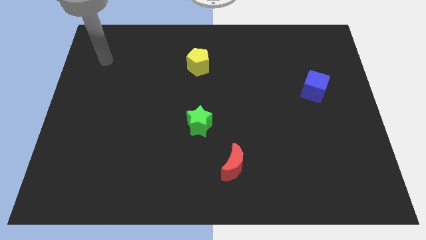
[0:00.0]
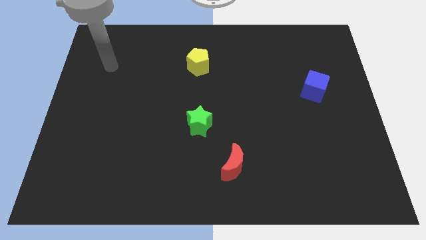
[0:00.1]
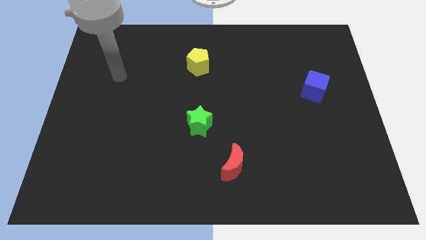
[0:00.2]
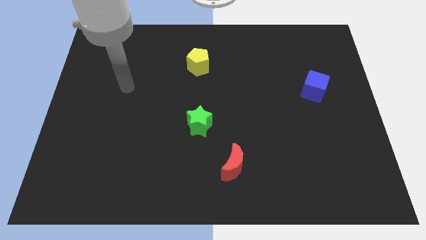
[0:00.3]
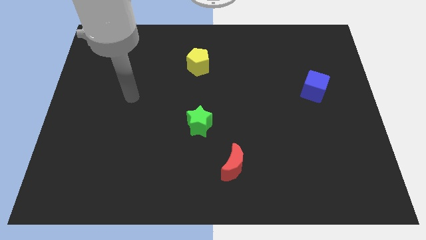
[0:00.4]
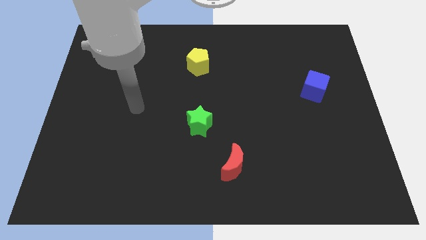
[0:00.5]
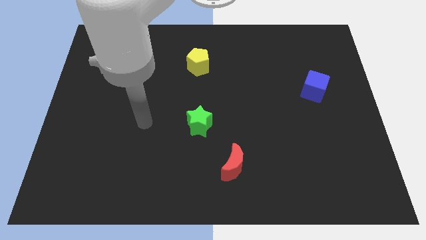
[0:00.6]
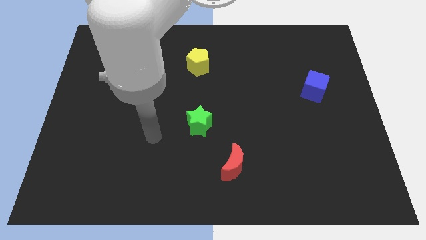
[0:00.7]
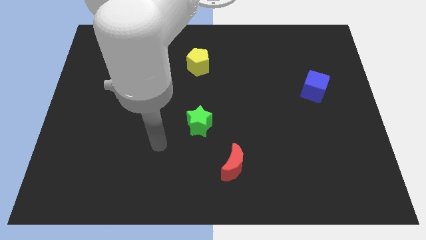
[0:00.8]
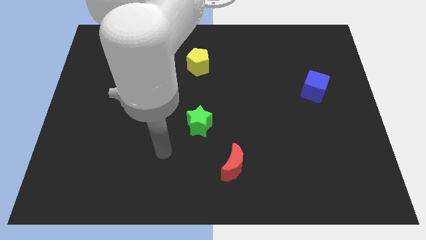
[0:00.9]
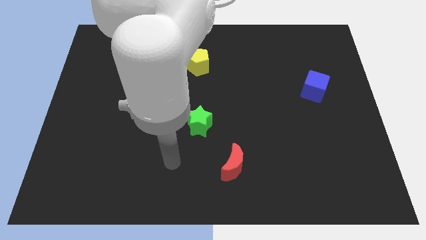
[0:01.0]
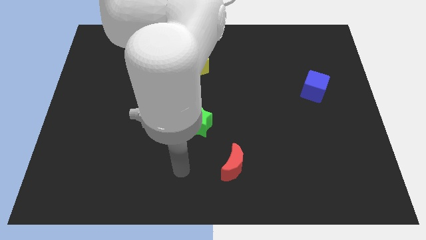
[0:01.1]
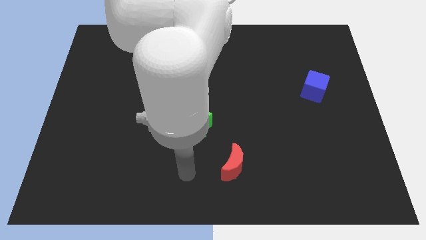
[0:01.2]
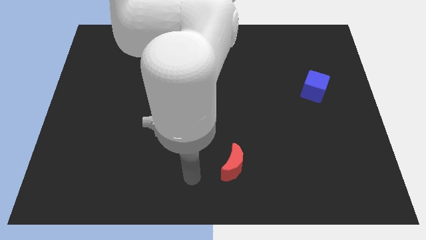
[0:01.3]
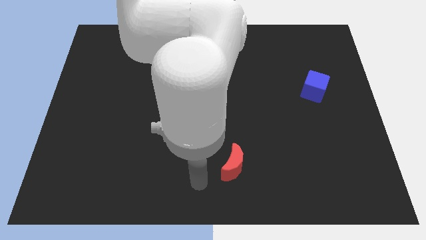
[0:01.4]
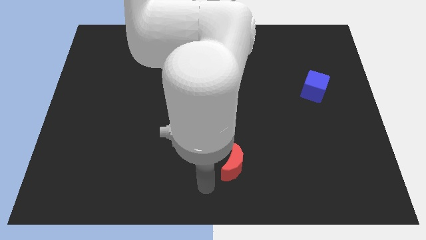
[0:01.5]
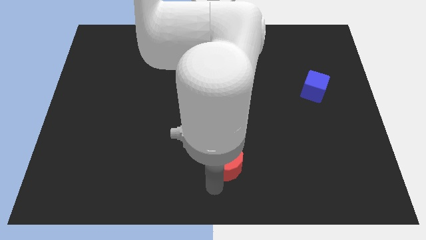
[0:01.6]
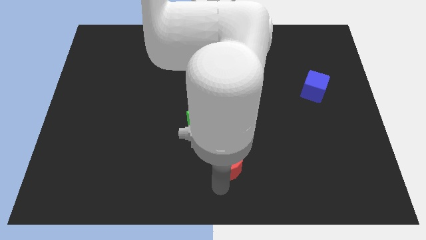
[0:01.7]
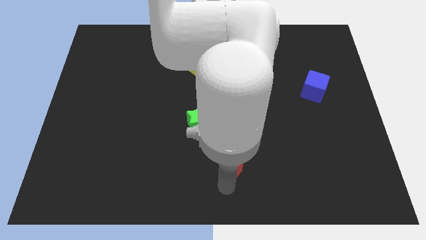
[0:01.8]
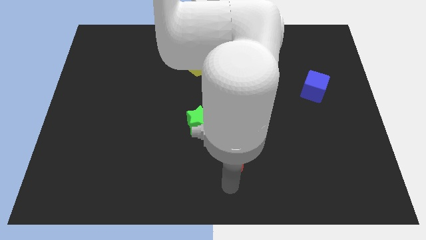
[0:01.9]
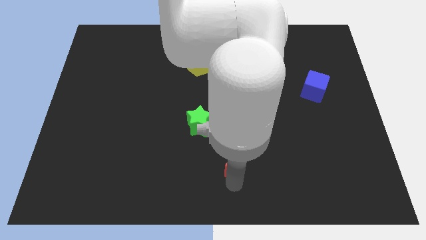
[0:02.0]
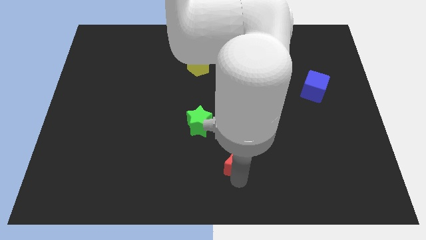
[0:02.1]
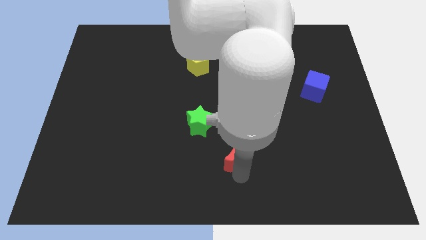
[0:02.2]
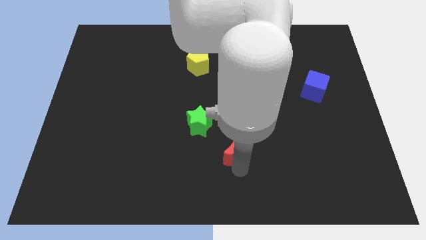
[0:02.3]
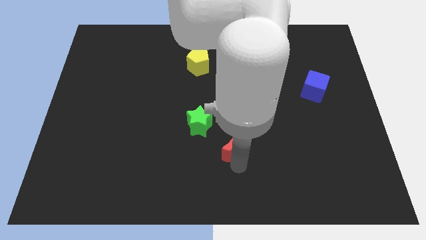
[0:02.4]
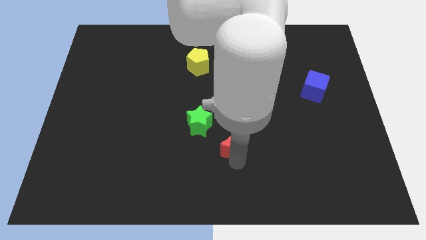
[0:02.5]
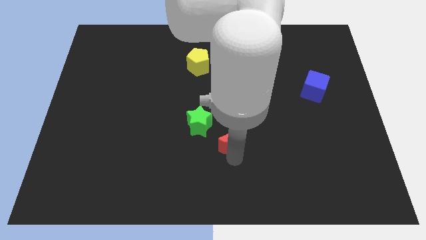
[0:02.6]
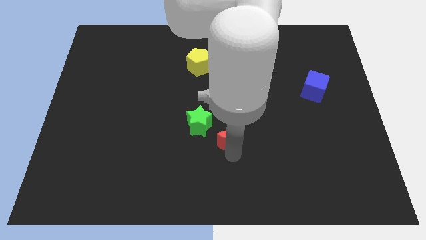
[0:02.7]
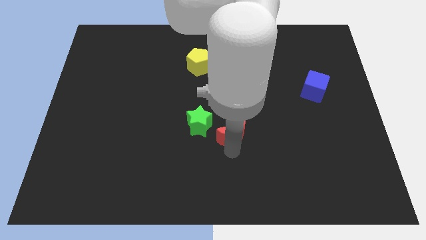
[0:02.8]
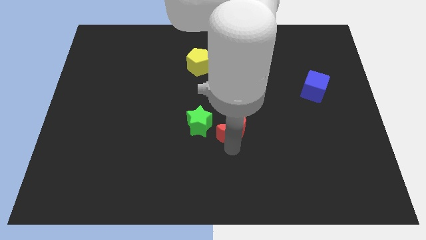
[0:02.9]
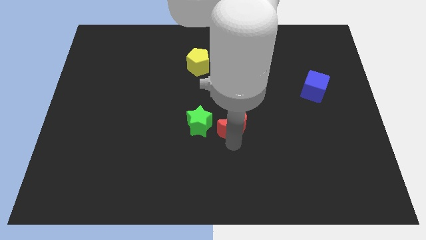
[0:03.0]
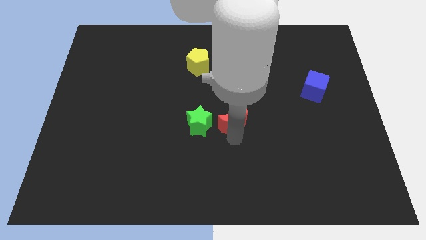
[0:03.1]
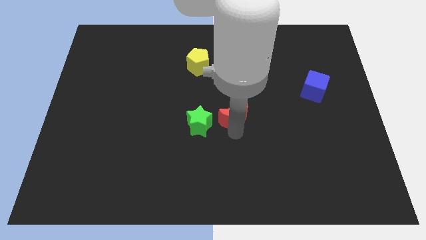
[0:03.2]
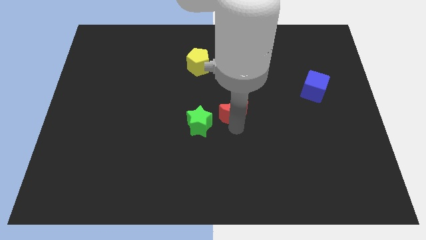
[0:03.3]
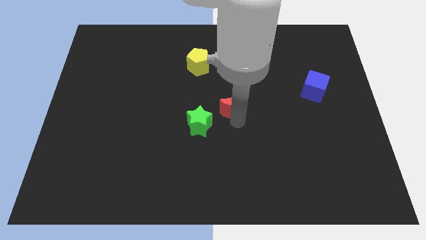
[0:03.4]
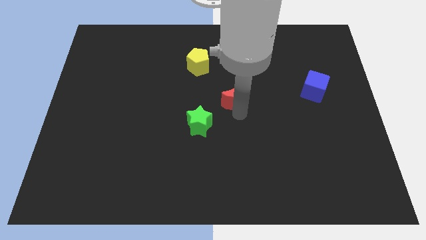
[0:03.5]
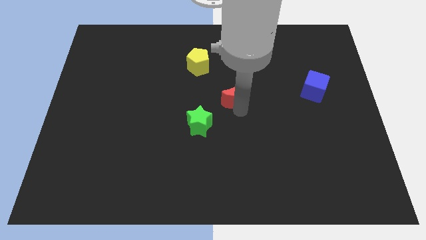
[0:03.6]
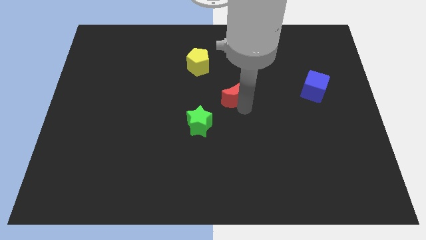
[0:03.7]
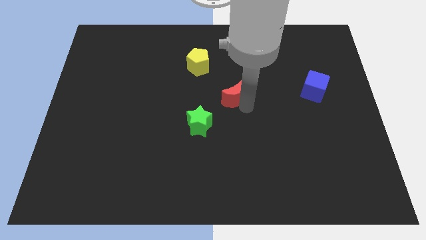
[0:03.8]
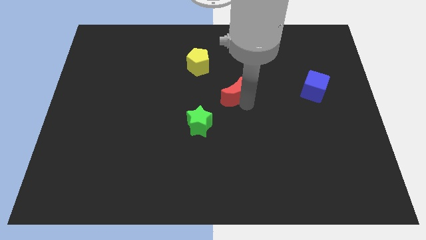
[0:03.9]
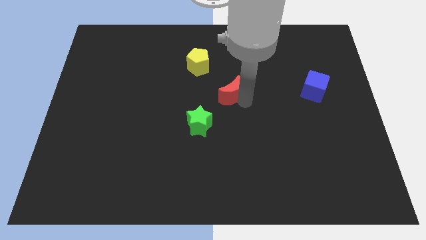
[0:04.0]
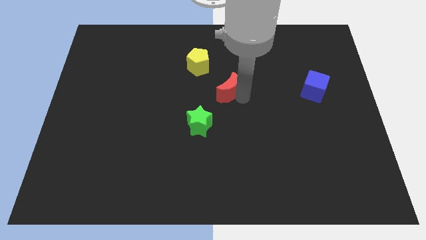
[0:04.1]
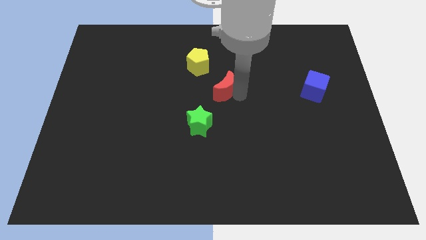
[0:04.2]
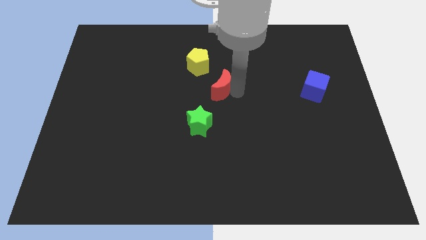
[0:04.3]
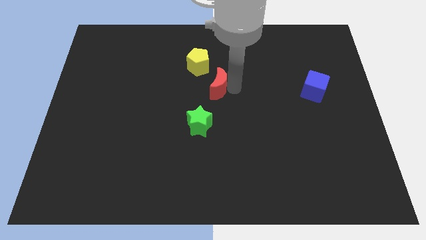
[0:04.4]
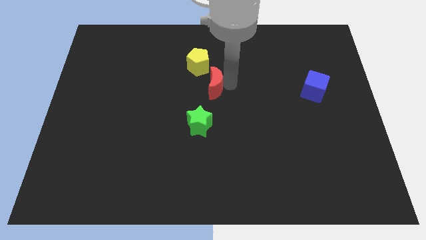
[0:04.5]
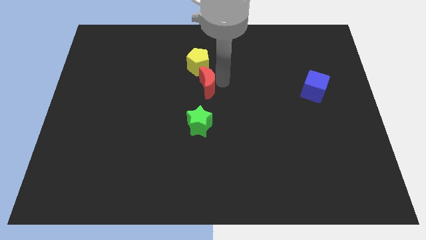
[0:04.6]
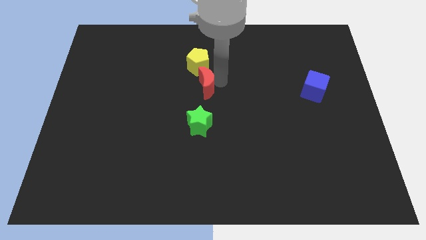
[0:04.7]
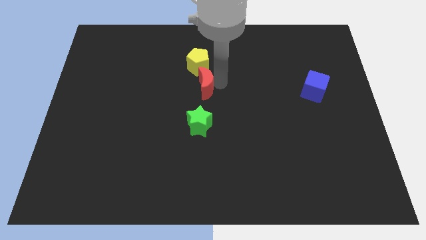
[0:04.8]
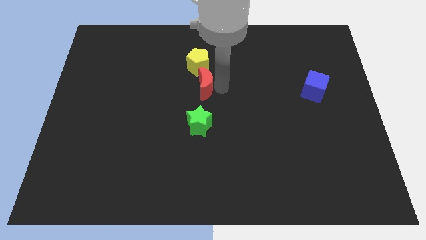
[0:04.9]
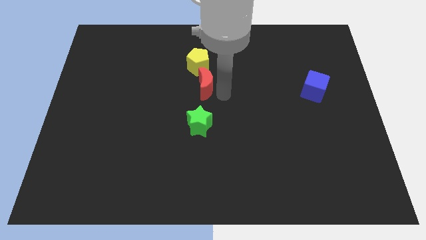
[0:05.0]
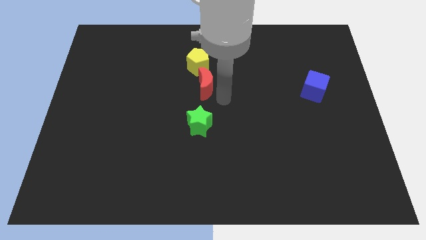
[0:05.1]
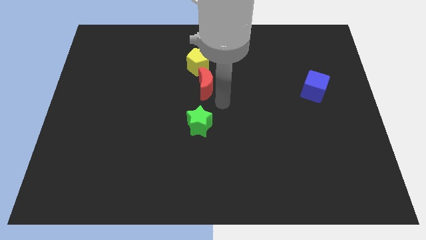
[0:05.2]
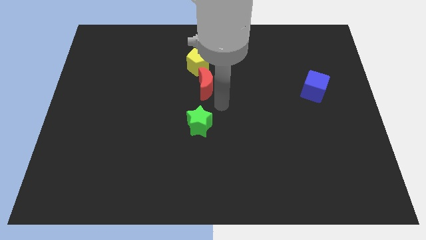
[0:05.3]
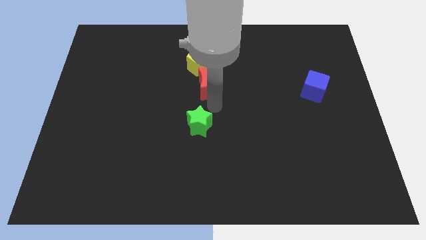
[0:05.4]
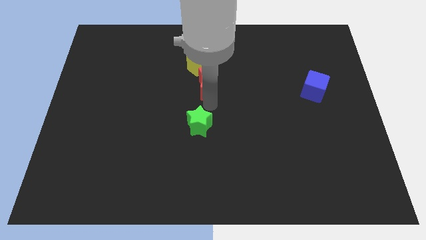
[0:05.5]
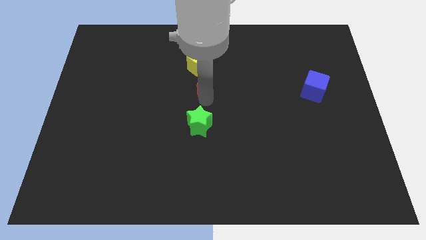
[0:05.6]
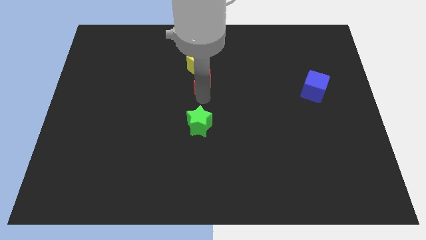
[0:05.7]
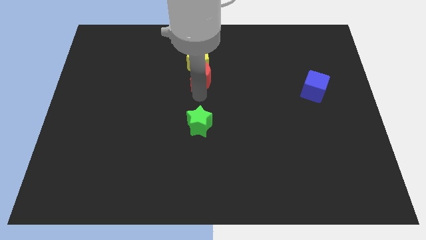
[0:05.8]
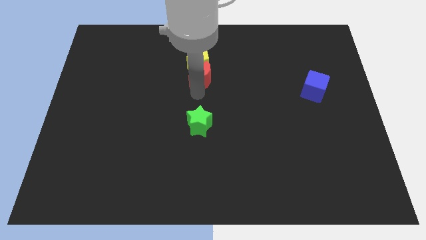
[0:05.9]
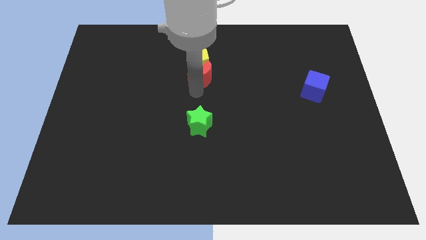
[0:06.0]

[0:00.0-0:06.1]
push the moon next to the yellow pentagon

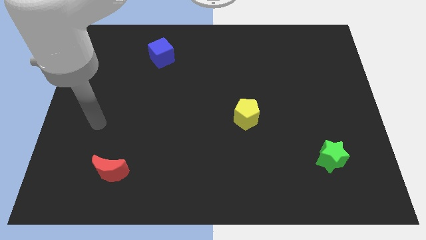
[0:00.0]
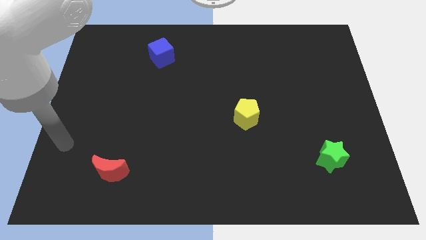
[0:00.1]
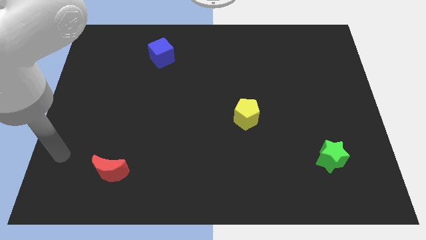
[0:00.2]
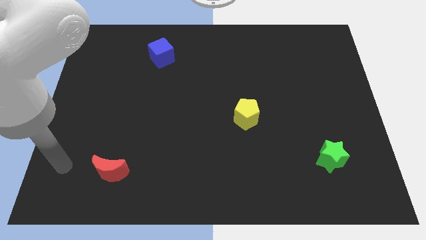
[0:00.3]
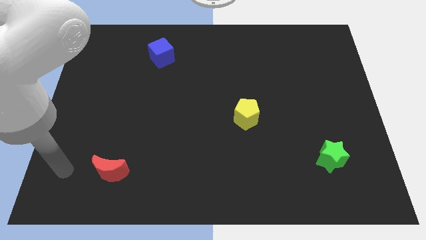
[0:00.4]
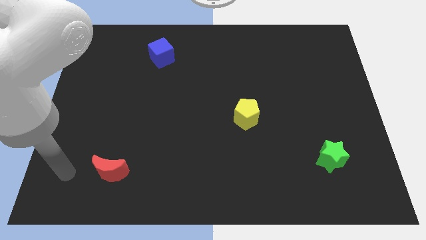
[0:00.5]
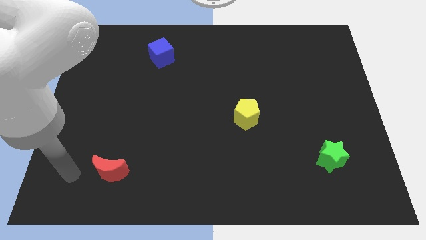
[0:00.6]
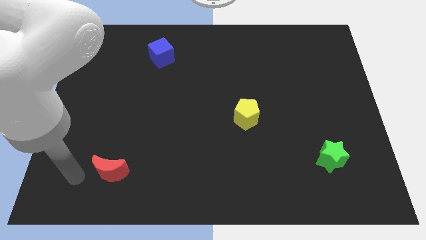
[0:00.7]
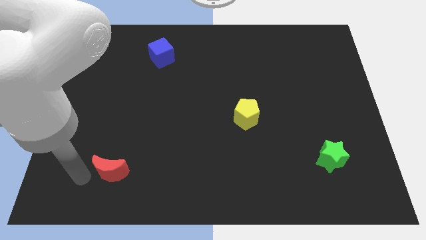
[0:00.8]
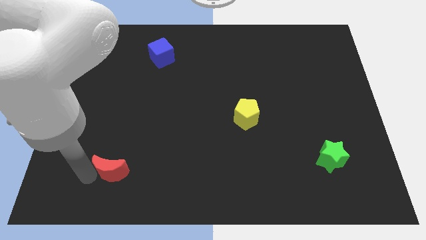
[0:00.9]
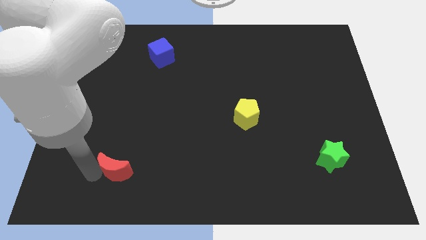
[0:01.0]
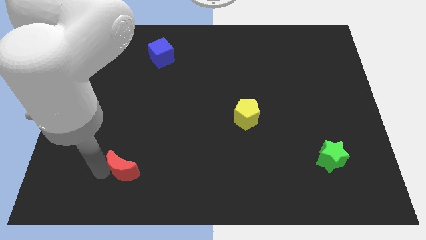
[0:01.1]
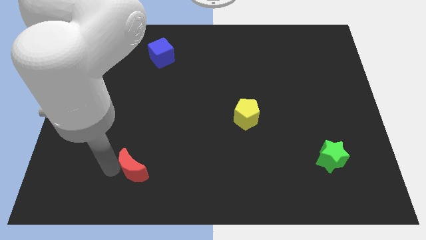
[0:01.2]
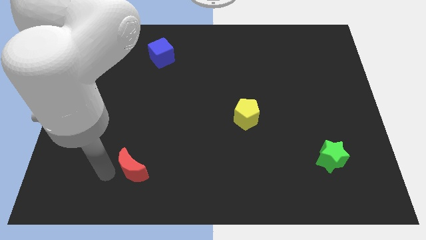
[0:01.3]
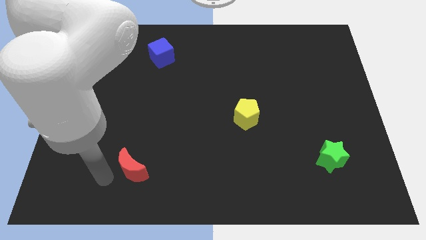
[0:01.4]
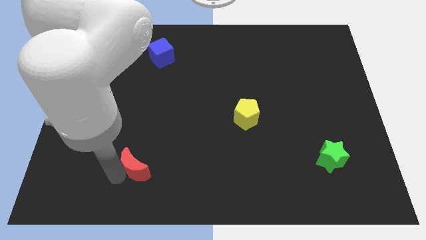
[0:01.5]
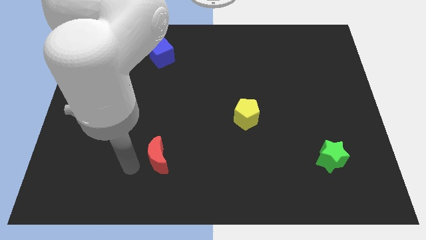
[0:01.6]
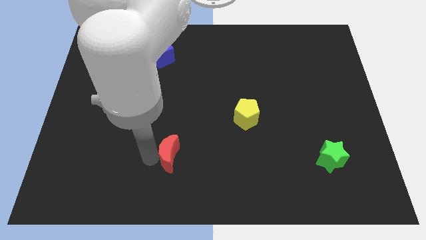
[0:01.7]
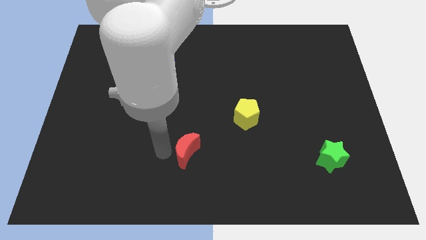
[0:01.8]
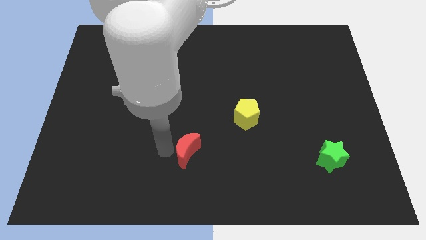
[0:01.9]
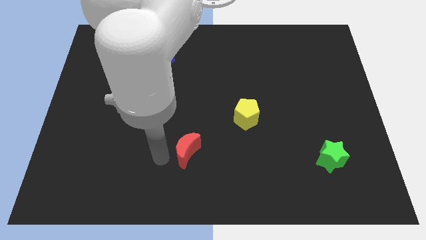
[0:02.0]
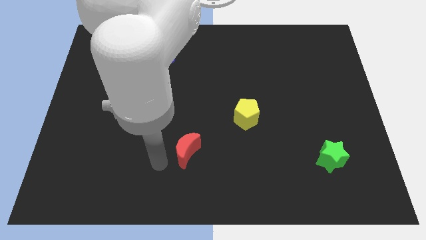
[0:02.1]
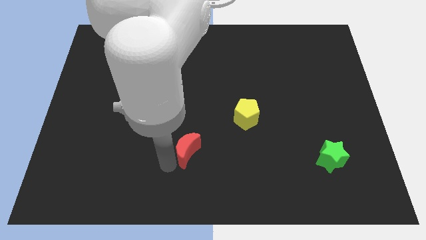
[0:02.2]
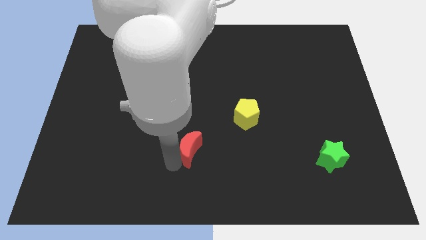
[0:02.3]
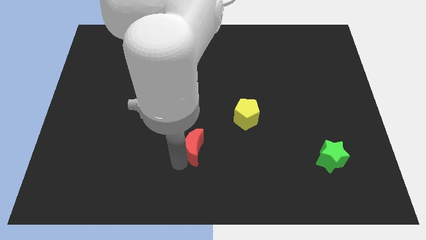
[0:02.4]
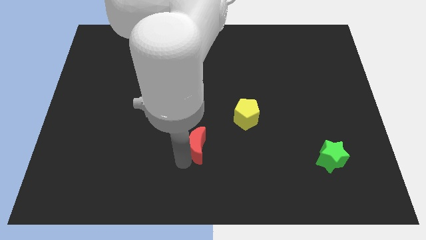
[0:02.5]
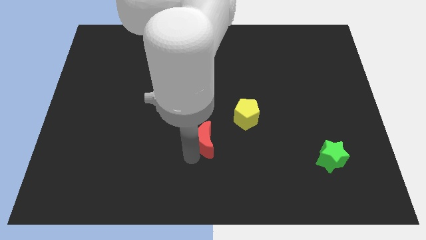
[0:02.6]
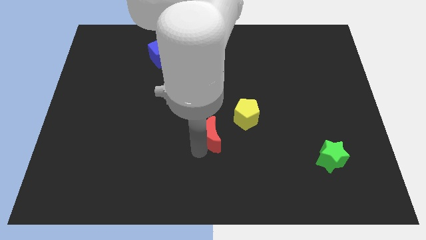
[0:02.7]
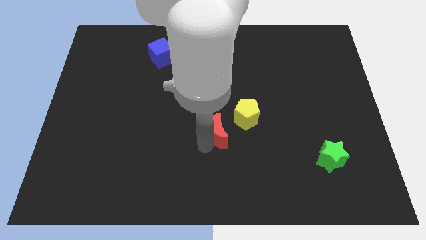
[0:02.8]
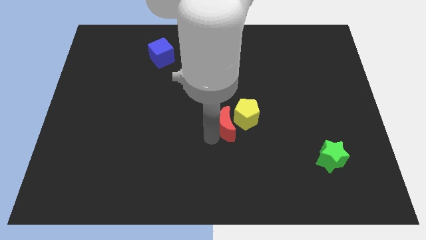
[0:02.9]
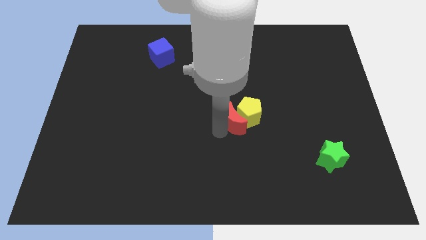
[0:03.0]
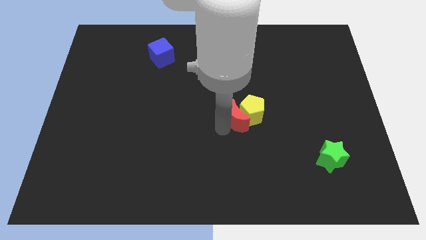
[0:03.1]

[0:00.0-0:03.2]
slide the red moon next to the yellow block
